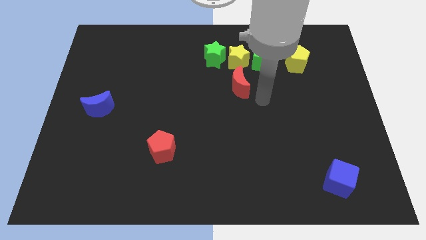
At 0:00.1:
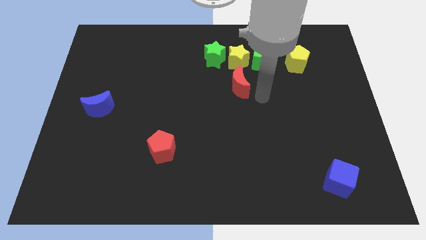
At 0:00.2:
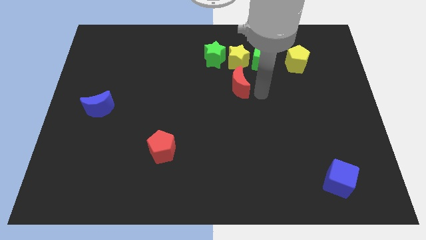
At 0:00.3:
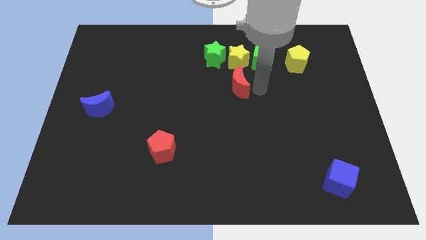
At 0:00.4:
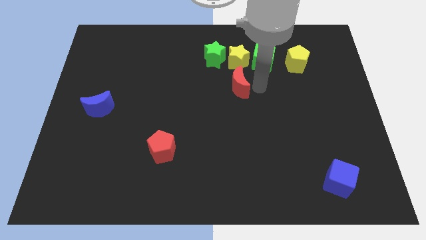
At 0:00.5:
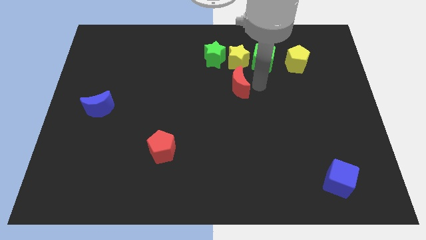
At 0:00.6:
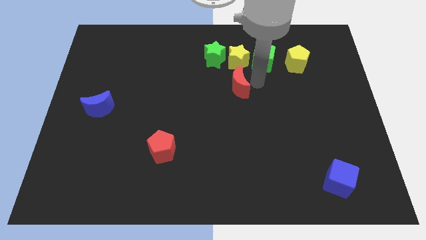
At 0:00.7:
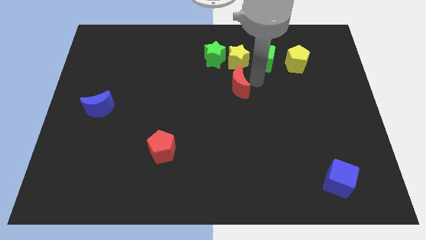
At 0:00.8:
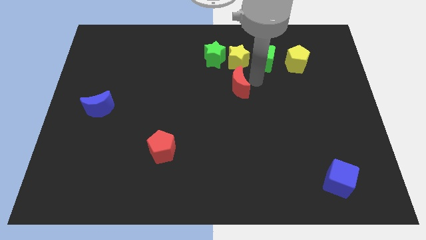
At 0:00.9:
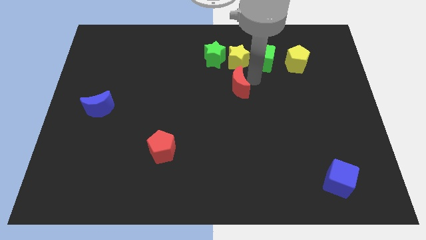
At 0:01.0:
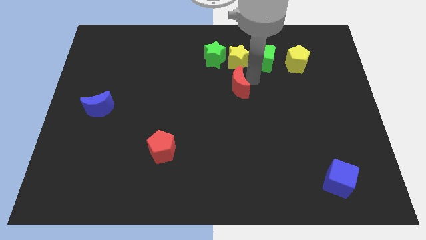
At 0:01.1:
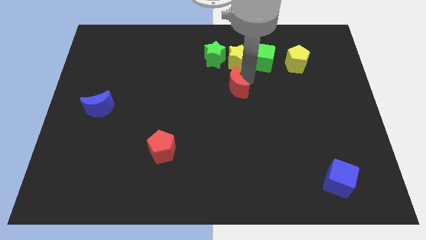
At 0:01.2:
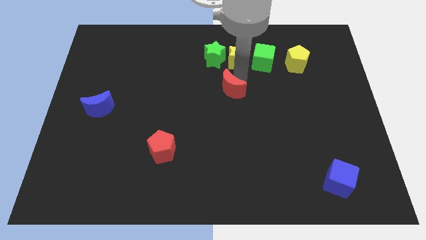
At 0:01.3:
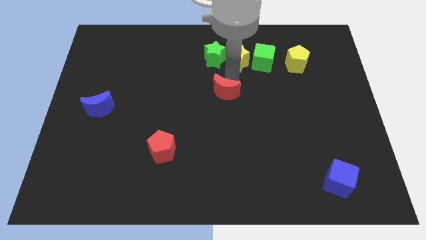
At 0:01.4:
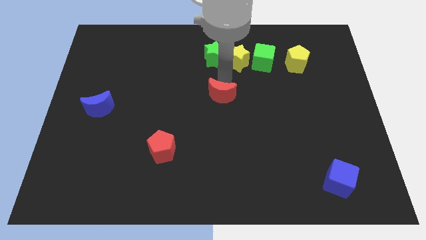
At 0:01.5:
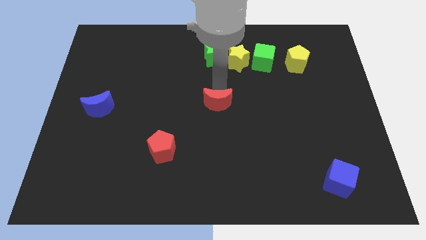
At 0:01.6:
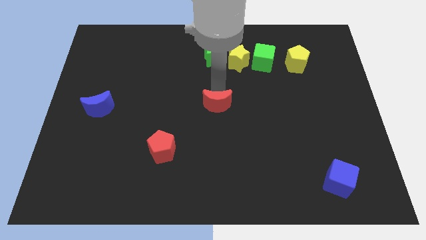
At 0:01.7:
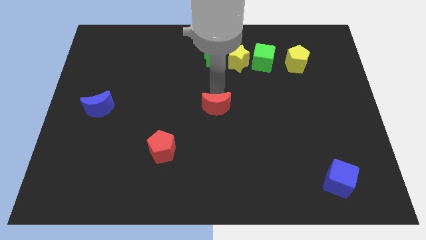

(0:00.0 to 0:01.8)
place the red crescent vertically below the green star

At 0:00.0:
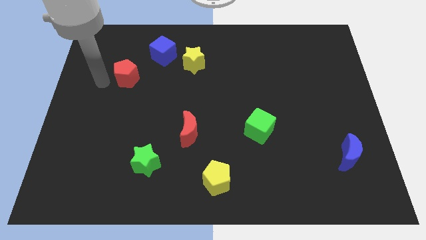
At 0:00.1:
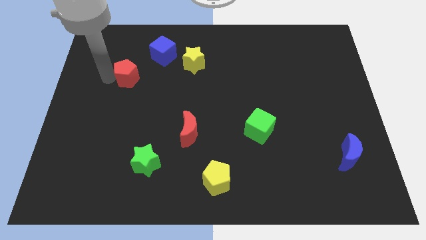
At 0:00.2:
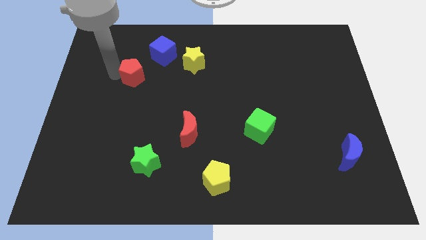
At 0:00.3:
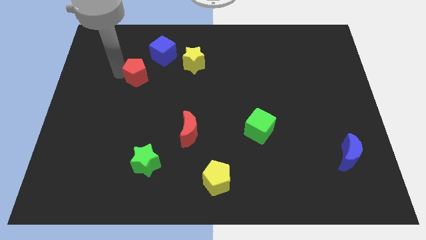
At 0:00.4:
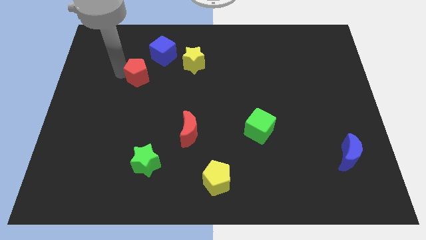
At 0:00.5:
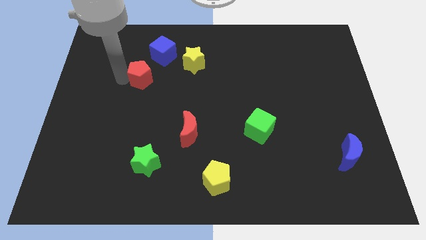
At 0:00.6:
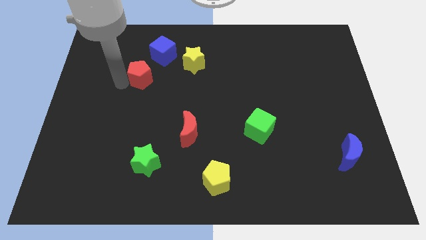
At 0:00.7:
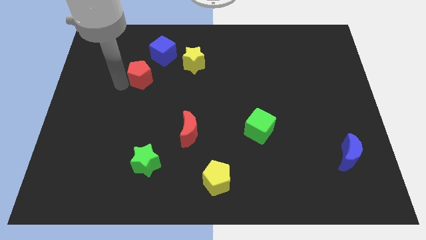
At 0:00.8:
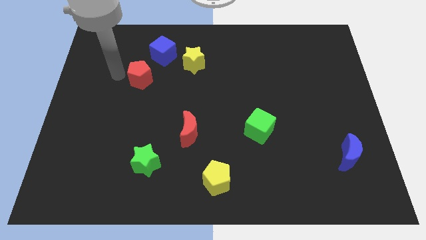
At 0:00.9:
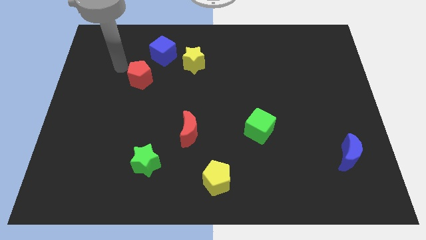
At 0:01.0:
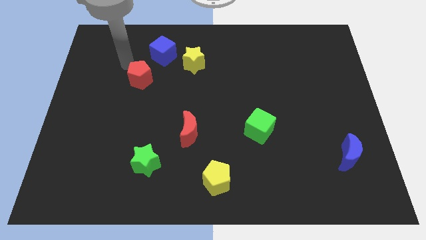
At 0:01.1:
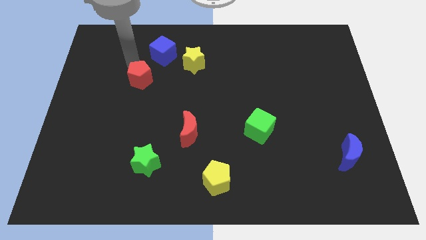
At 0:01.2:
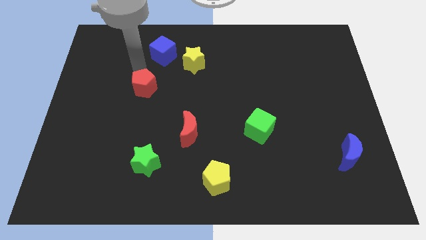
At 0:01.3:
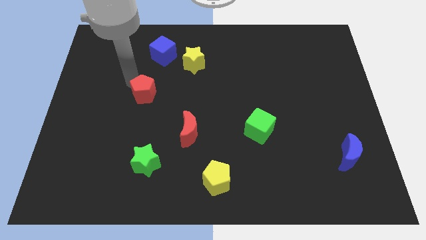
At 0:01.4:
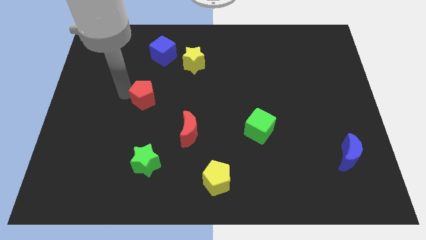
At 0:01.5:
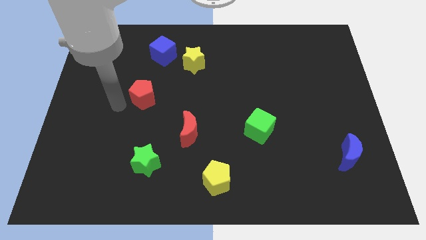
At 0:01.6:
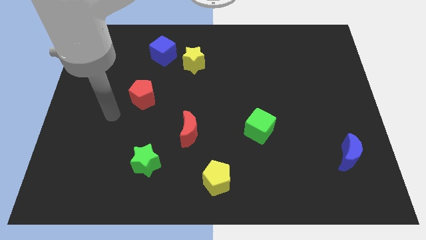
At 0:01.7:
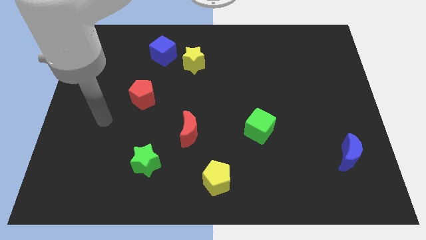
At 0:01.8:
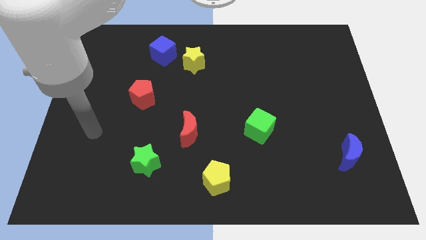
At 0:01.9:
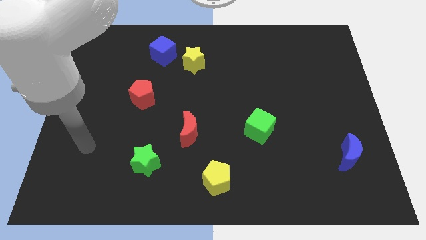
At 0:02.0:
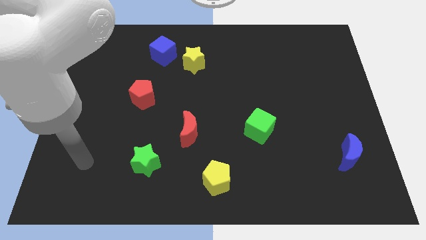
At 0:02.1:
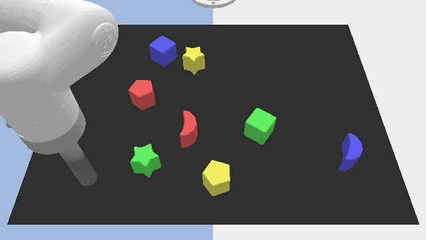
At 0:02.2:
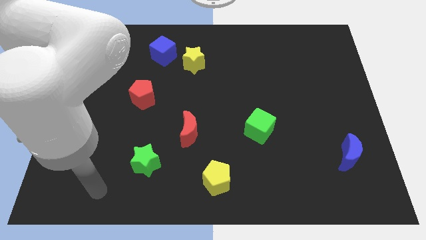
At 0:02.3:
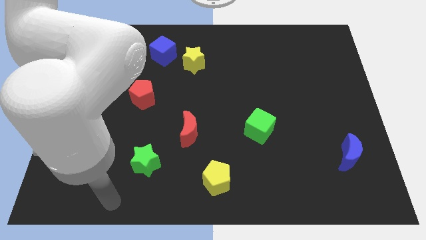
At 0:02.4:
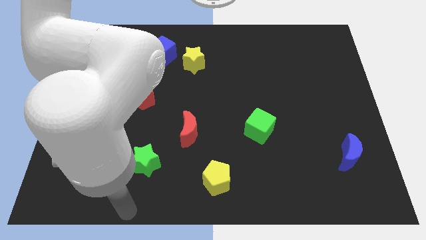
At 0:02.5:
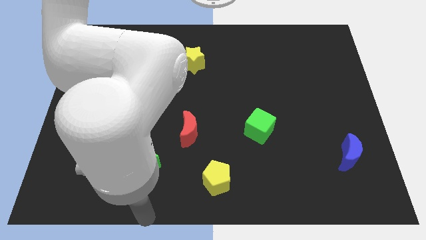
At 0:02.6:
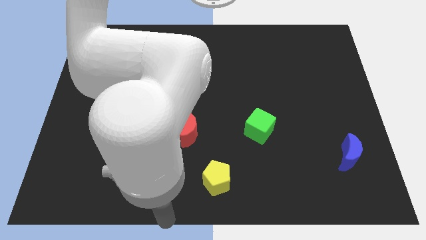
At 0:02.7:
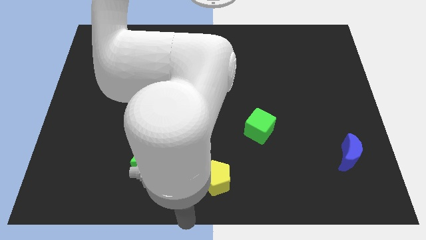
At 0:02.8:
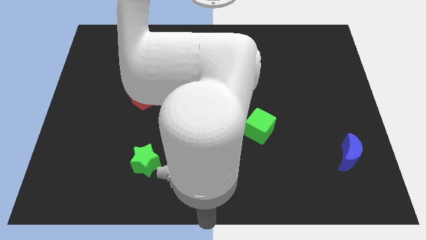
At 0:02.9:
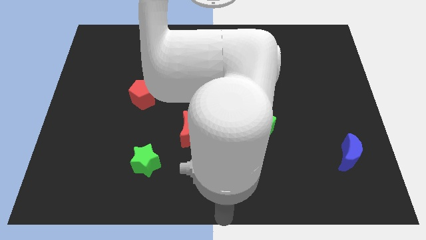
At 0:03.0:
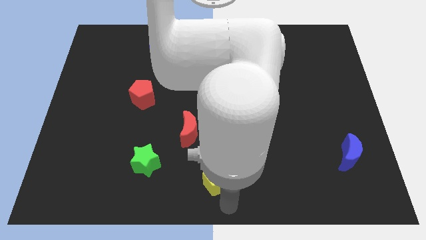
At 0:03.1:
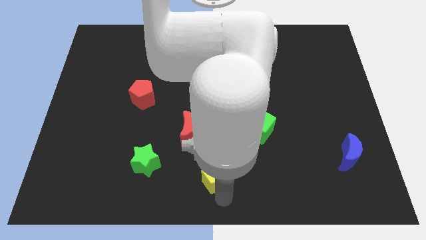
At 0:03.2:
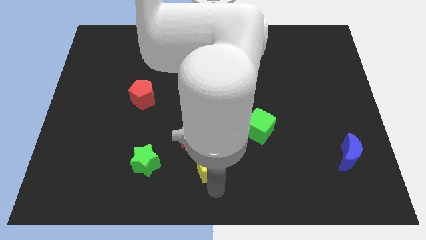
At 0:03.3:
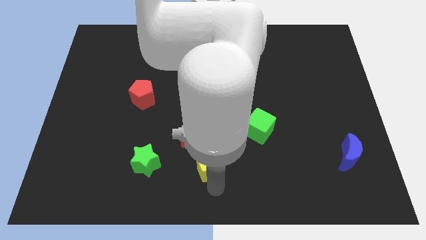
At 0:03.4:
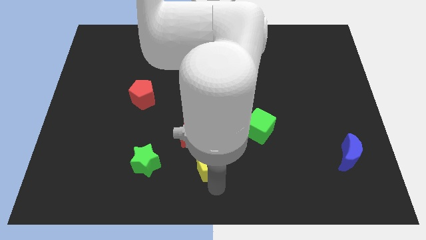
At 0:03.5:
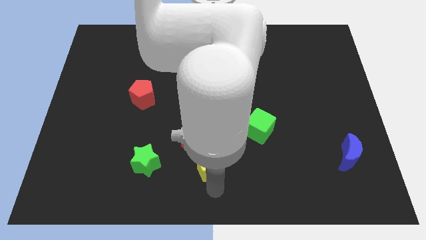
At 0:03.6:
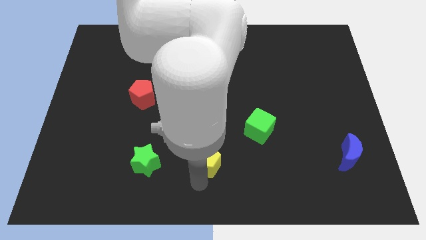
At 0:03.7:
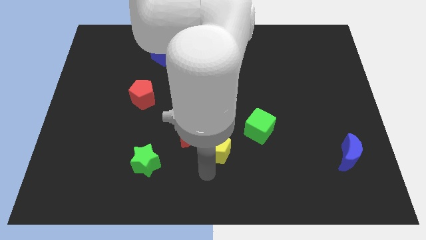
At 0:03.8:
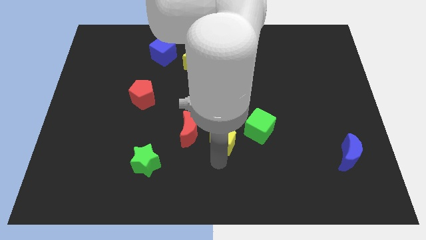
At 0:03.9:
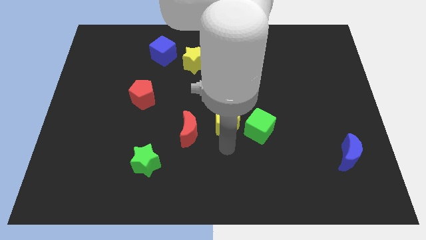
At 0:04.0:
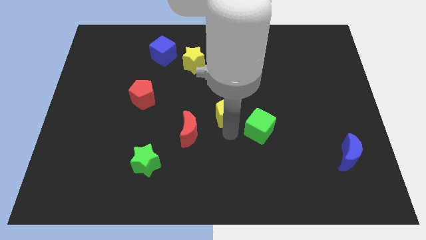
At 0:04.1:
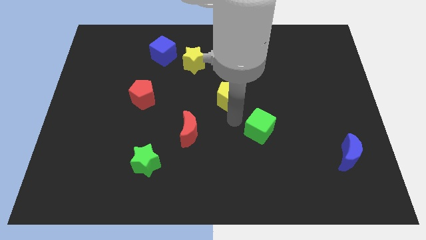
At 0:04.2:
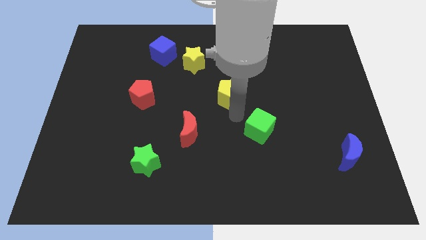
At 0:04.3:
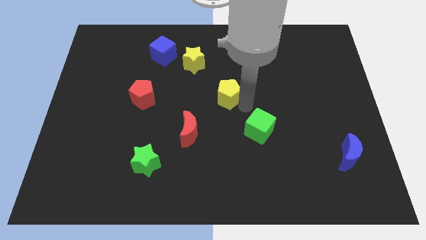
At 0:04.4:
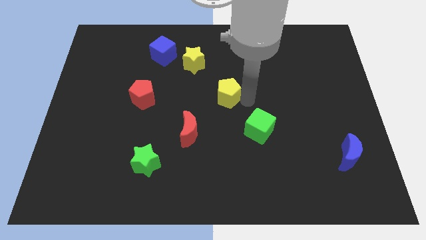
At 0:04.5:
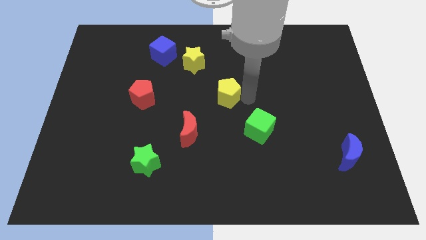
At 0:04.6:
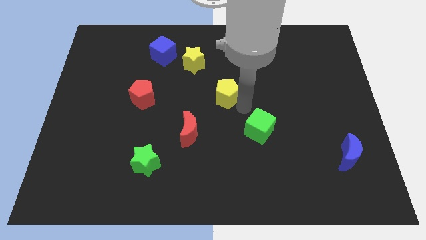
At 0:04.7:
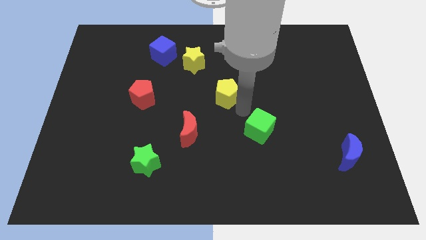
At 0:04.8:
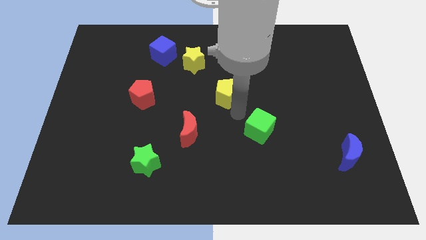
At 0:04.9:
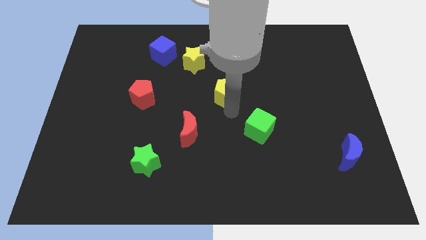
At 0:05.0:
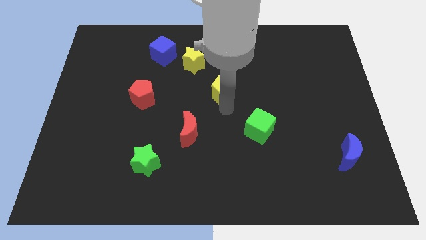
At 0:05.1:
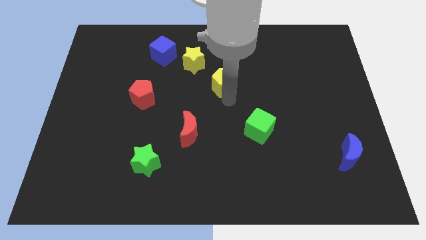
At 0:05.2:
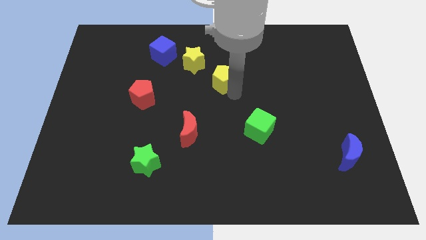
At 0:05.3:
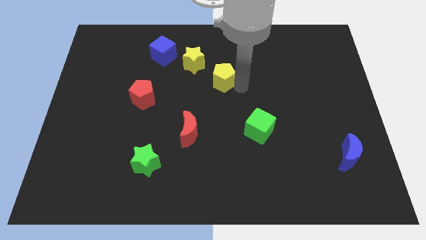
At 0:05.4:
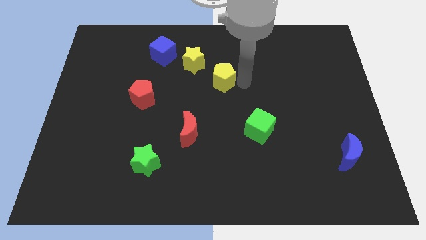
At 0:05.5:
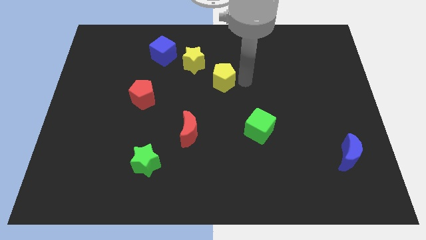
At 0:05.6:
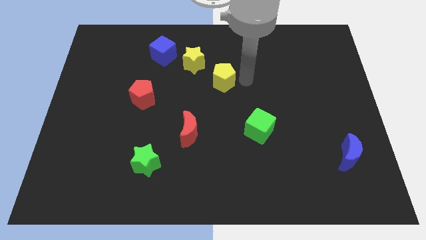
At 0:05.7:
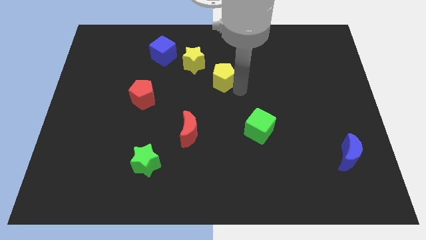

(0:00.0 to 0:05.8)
move the red pentagon to left side of red crescent

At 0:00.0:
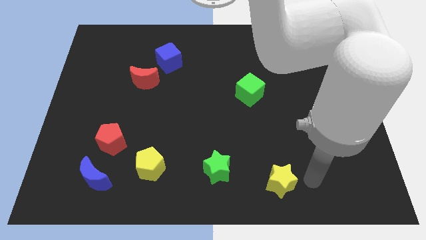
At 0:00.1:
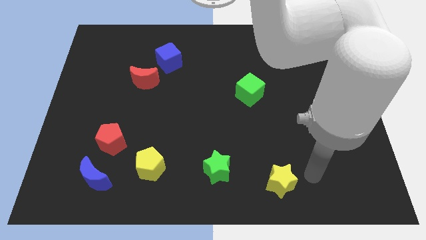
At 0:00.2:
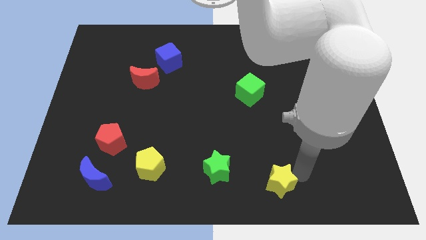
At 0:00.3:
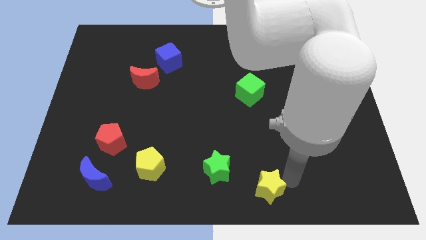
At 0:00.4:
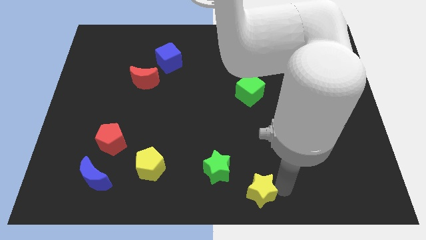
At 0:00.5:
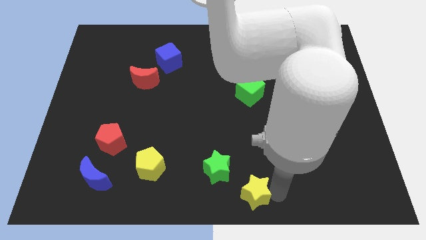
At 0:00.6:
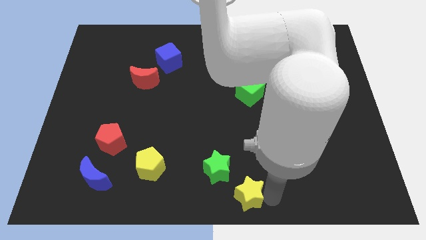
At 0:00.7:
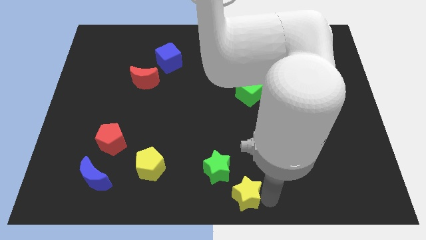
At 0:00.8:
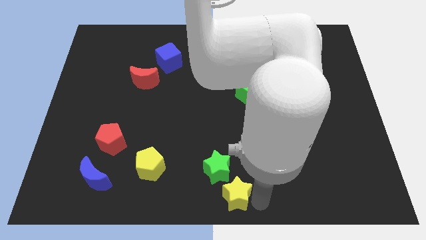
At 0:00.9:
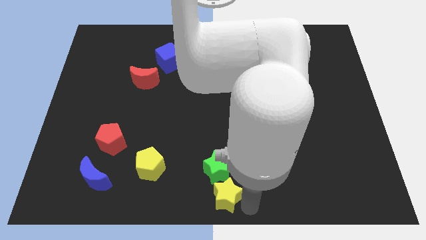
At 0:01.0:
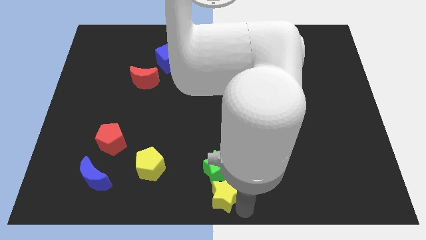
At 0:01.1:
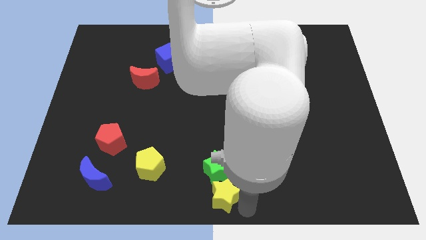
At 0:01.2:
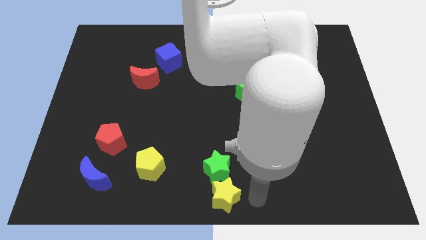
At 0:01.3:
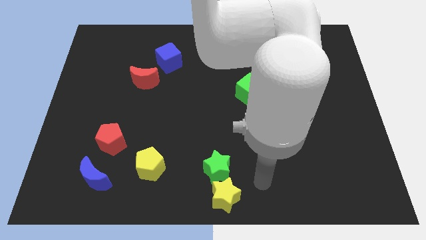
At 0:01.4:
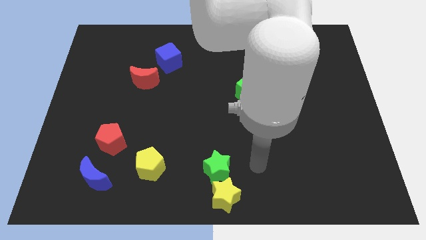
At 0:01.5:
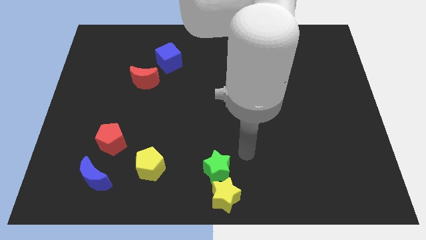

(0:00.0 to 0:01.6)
place the yellow star below the green star
